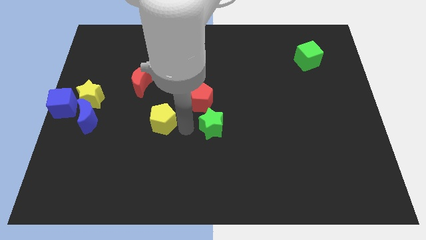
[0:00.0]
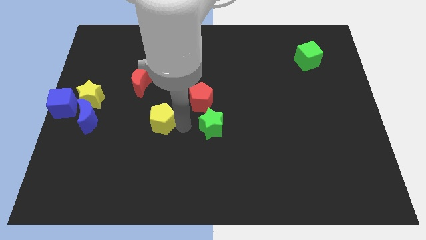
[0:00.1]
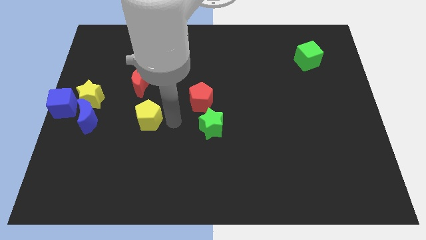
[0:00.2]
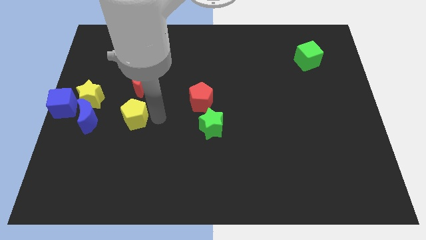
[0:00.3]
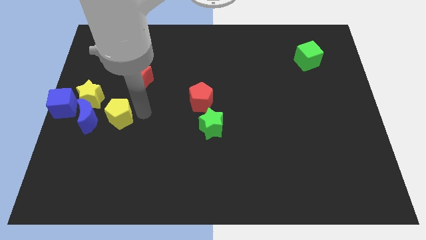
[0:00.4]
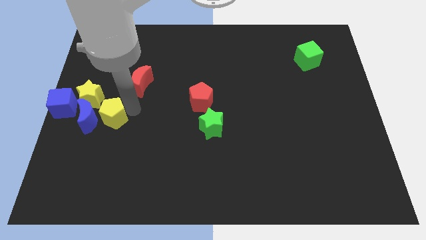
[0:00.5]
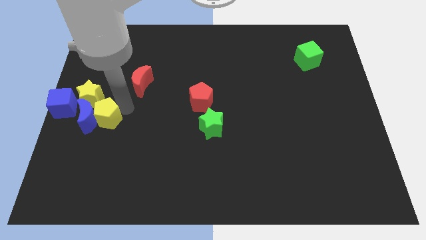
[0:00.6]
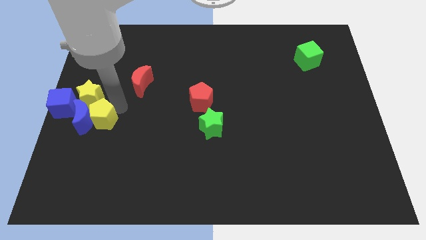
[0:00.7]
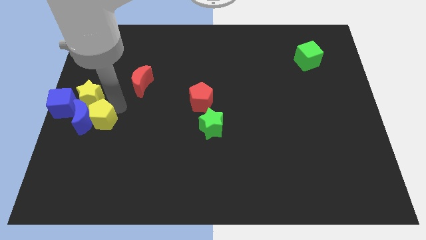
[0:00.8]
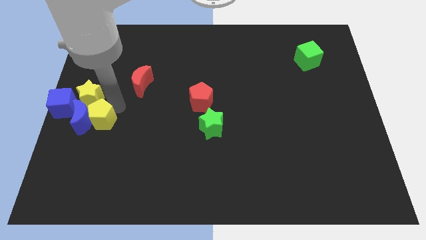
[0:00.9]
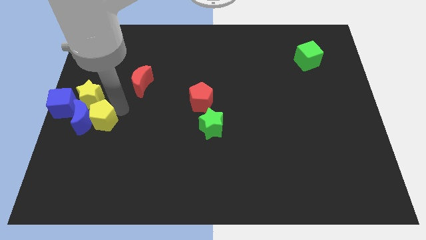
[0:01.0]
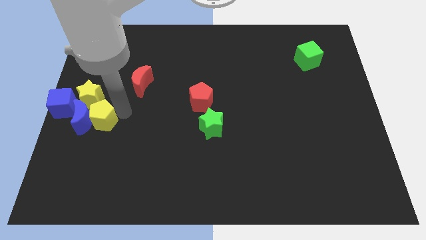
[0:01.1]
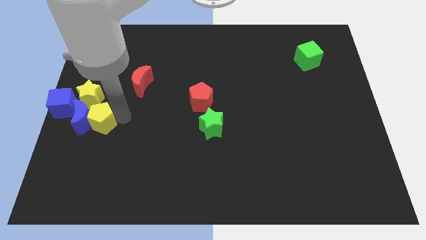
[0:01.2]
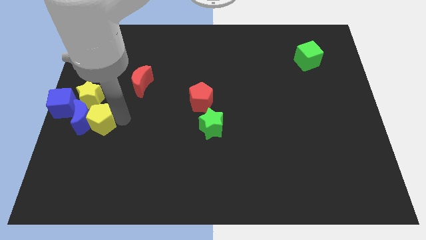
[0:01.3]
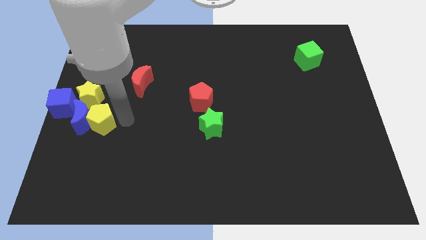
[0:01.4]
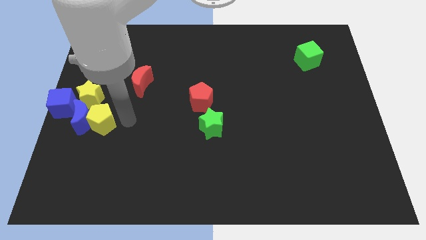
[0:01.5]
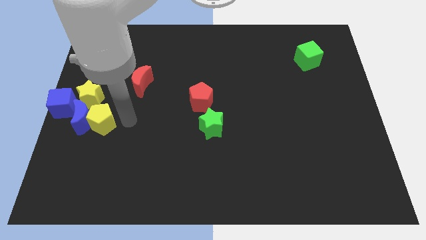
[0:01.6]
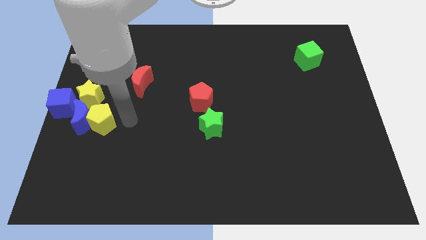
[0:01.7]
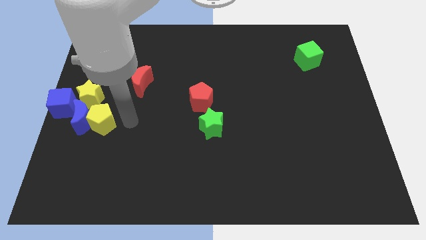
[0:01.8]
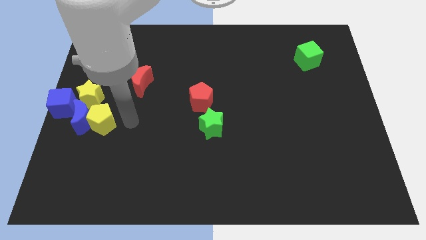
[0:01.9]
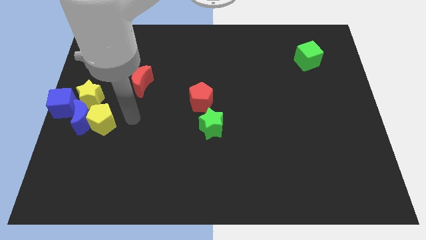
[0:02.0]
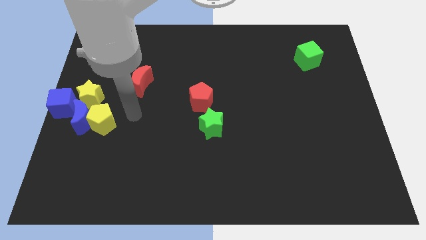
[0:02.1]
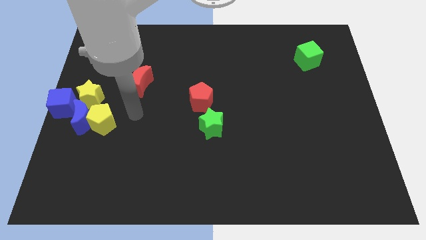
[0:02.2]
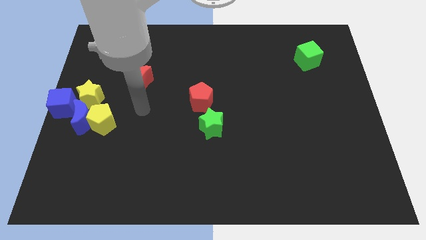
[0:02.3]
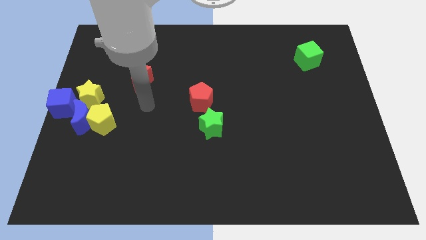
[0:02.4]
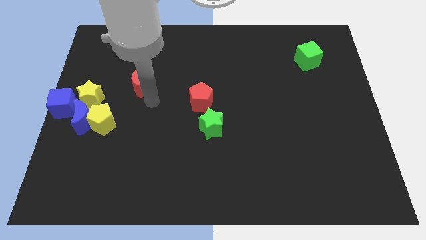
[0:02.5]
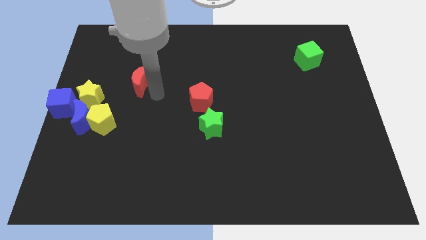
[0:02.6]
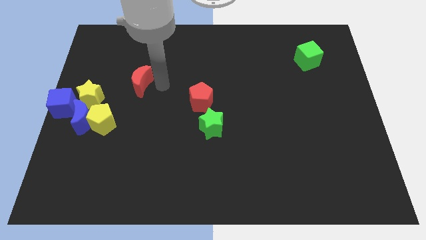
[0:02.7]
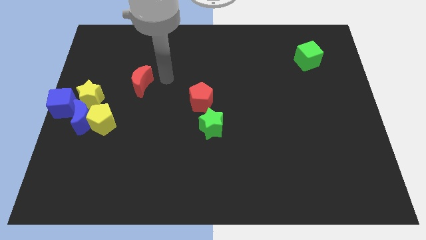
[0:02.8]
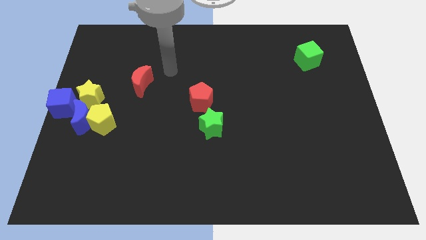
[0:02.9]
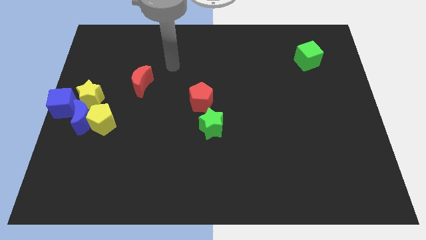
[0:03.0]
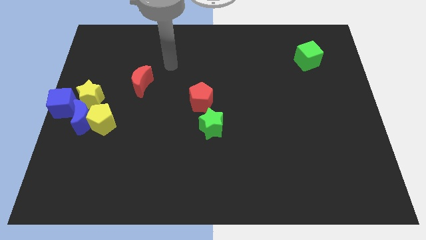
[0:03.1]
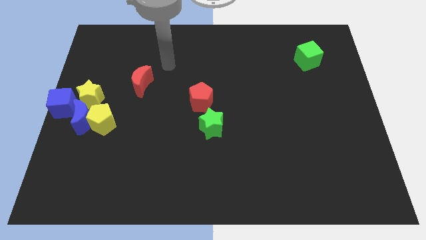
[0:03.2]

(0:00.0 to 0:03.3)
push the yellow pentagon into the blue moon

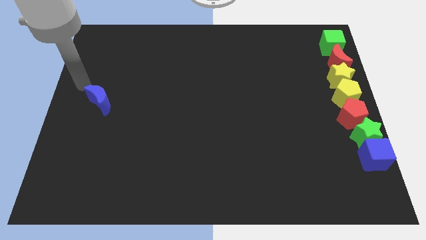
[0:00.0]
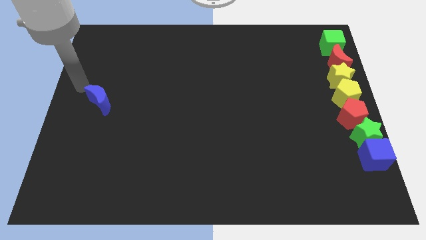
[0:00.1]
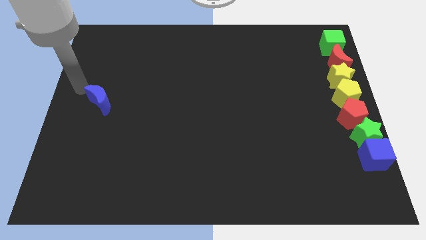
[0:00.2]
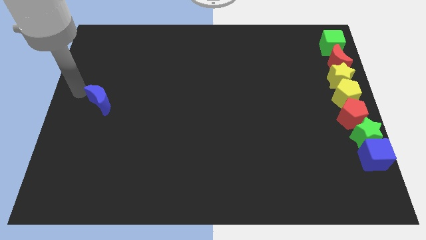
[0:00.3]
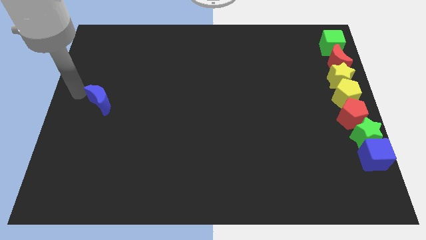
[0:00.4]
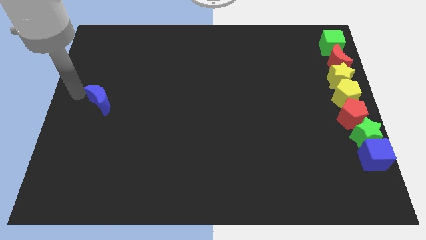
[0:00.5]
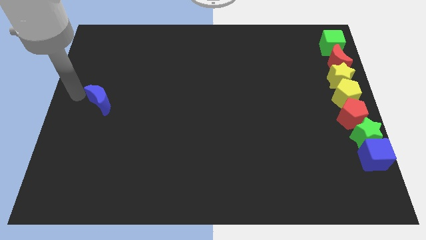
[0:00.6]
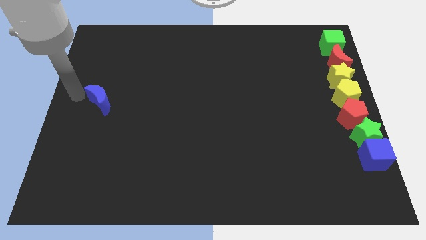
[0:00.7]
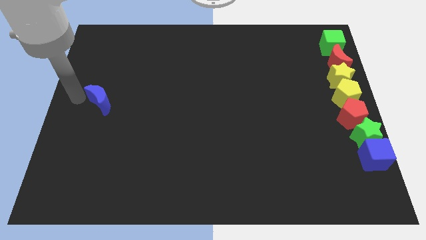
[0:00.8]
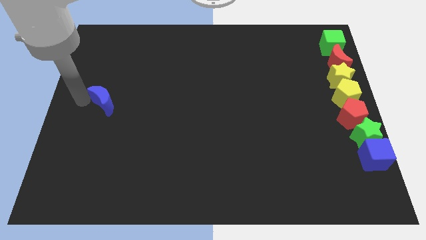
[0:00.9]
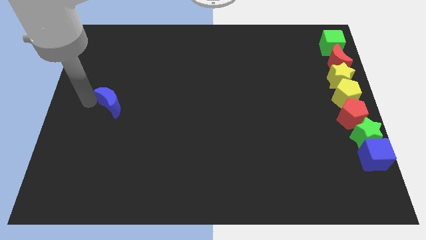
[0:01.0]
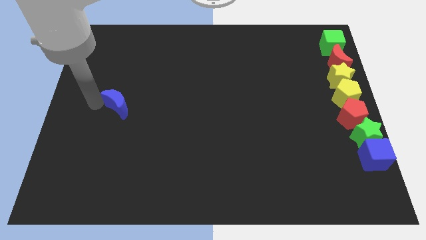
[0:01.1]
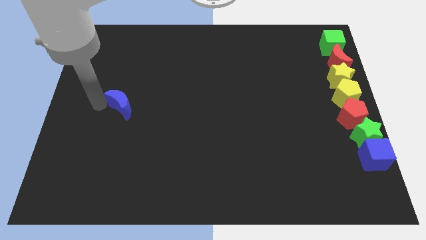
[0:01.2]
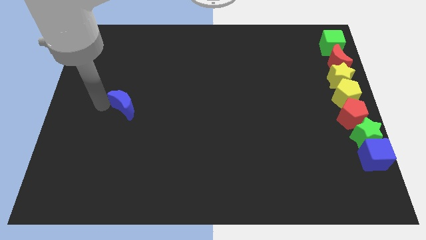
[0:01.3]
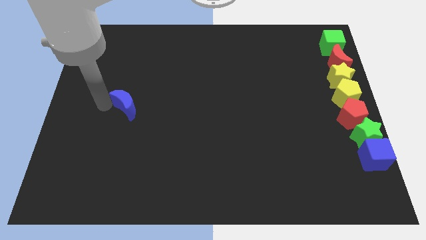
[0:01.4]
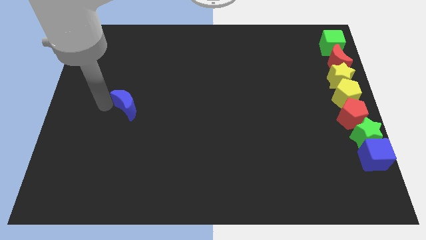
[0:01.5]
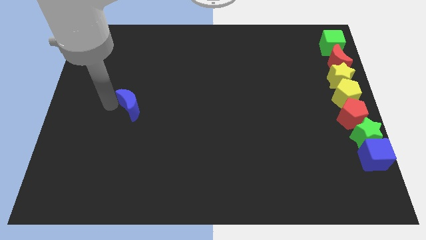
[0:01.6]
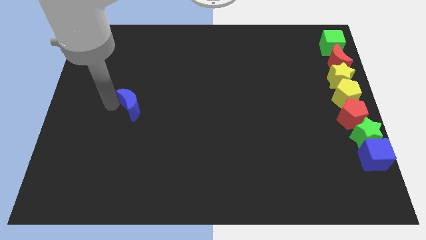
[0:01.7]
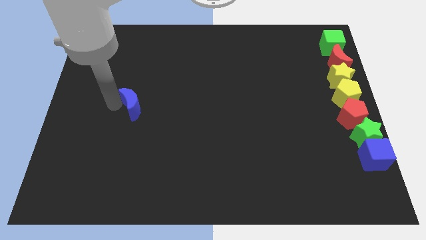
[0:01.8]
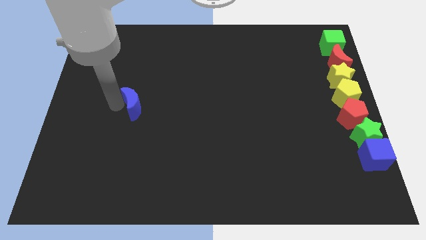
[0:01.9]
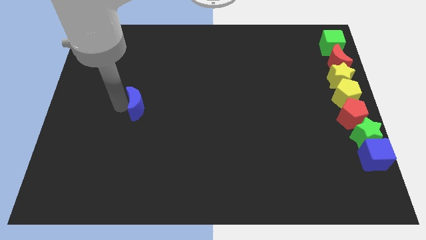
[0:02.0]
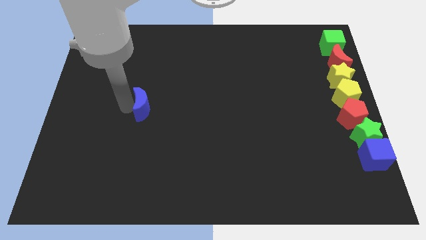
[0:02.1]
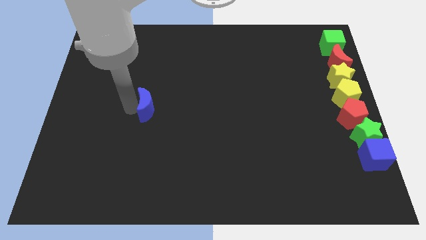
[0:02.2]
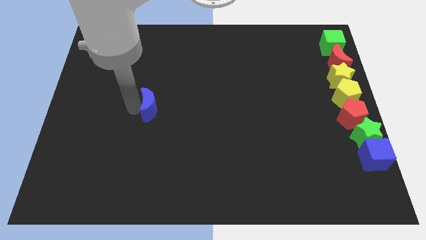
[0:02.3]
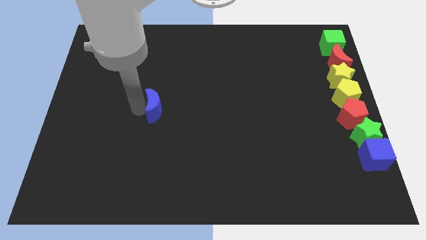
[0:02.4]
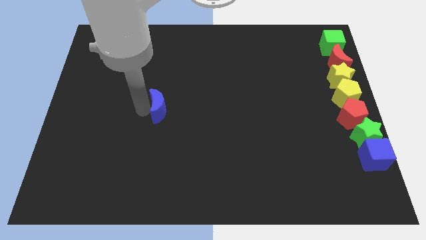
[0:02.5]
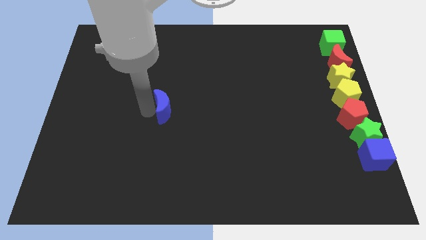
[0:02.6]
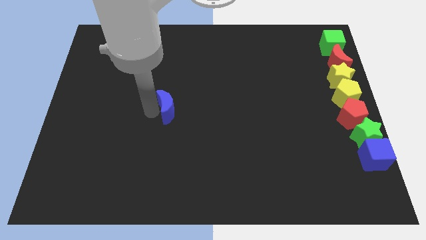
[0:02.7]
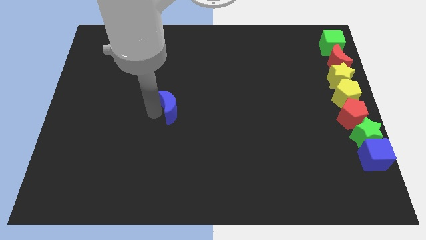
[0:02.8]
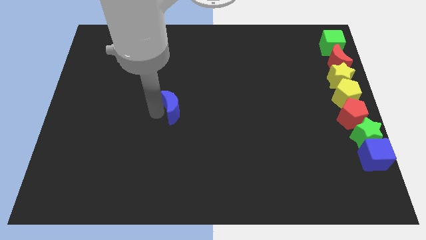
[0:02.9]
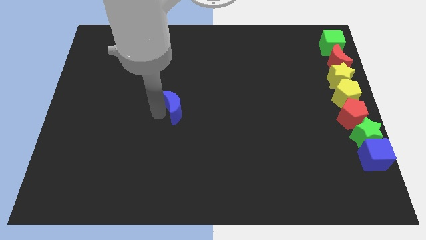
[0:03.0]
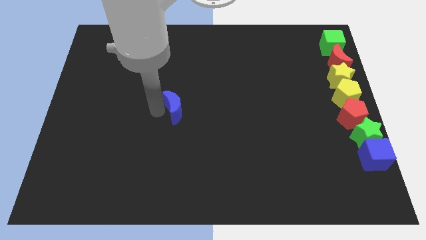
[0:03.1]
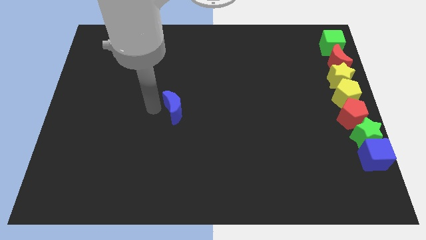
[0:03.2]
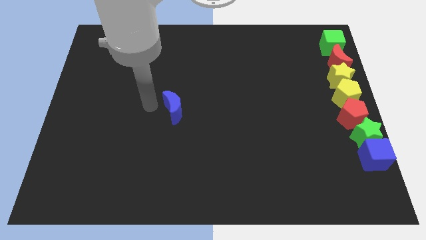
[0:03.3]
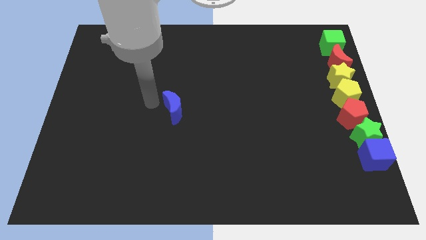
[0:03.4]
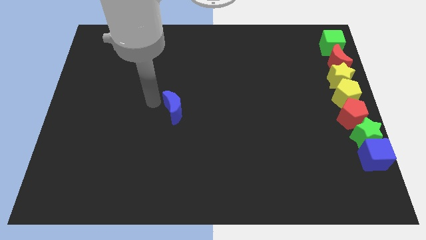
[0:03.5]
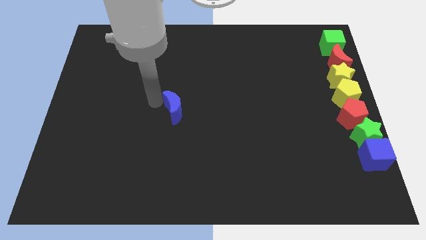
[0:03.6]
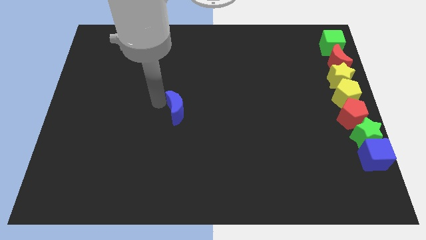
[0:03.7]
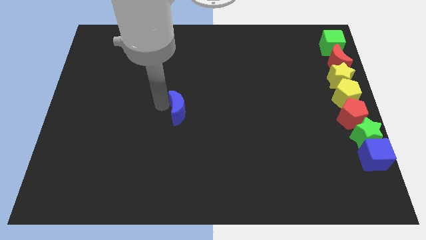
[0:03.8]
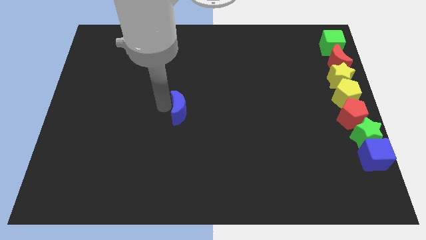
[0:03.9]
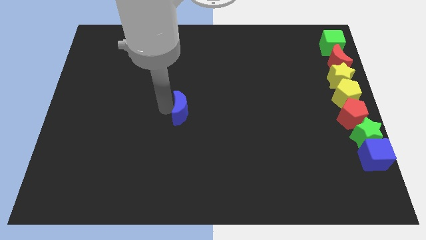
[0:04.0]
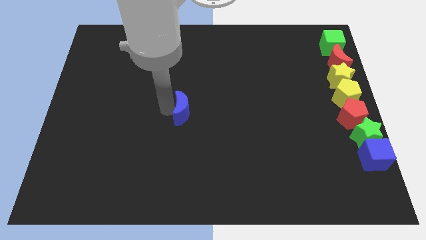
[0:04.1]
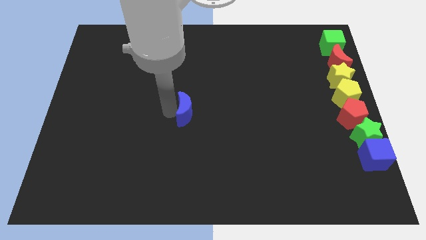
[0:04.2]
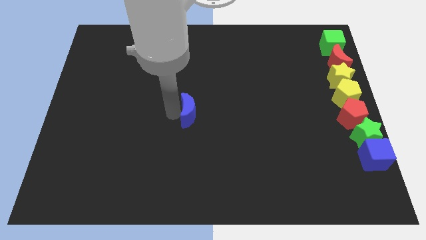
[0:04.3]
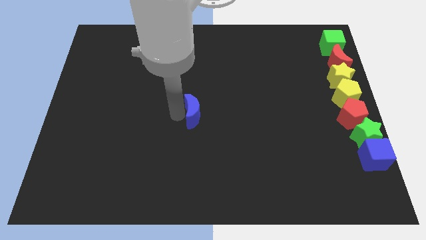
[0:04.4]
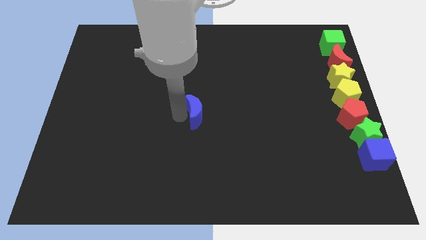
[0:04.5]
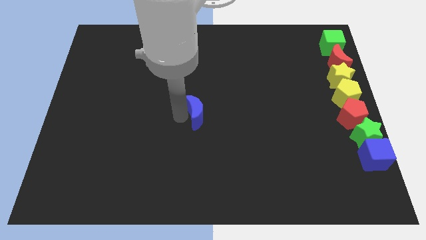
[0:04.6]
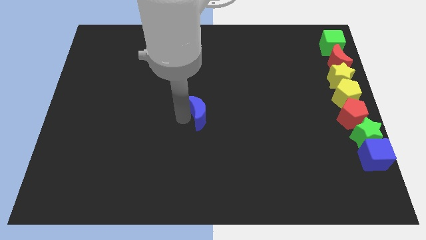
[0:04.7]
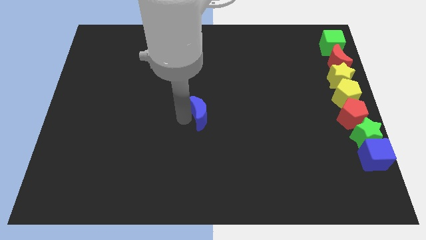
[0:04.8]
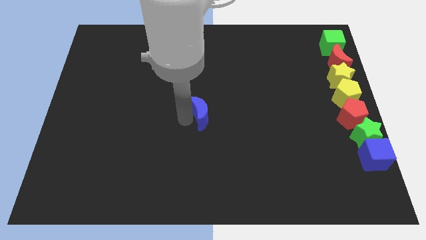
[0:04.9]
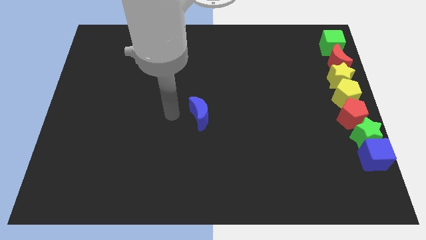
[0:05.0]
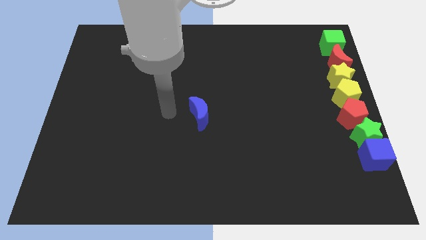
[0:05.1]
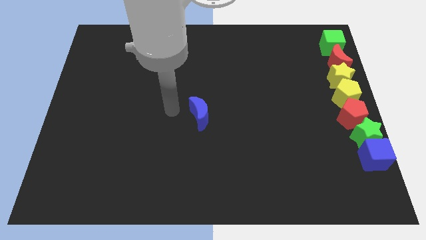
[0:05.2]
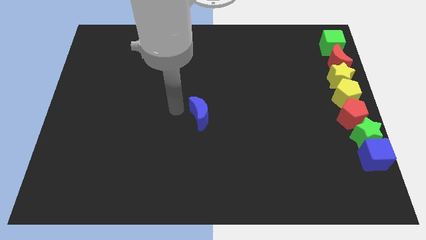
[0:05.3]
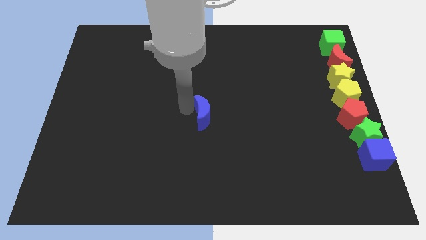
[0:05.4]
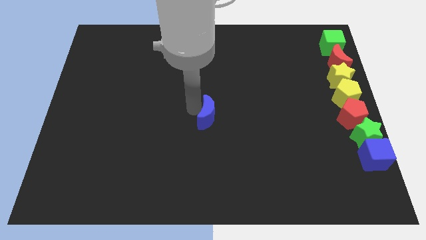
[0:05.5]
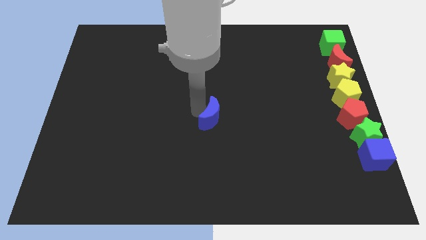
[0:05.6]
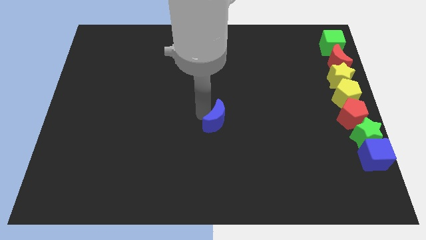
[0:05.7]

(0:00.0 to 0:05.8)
place the blue crescent at the center of the board
